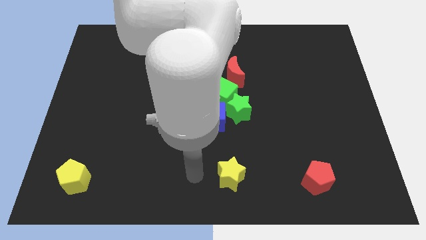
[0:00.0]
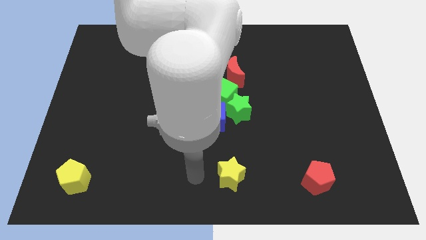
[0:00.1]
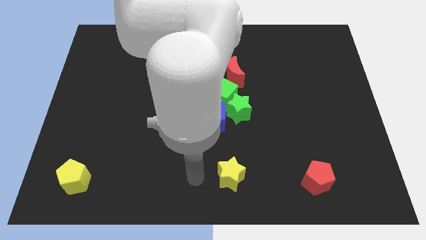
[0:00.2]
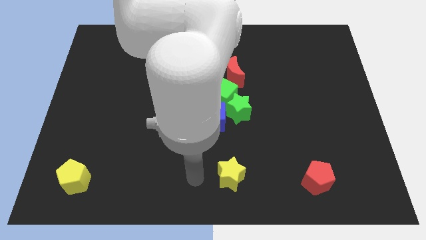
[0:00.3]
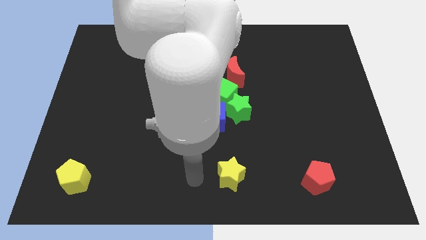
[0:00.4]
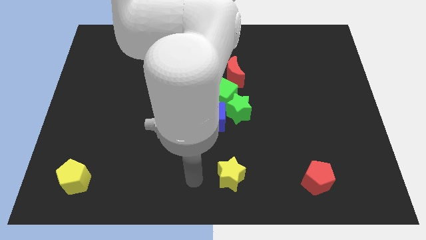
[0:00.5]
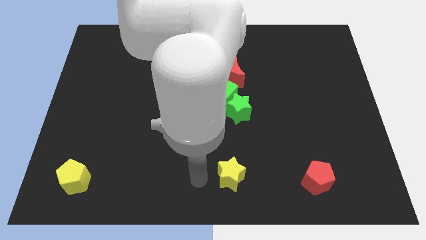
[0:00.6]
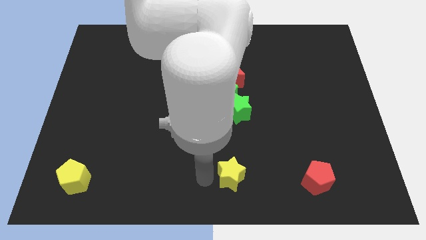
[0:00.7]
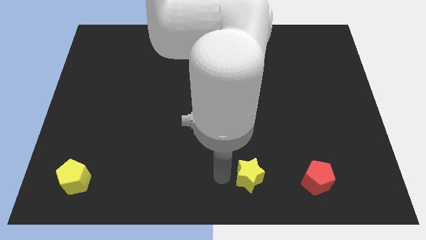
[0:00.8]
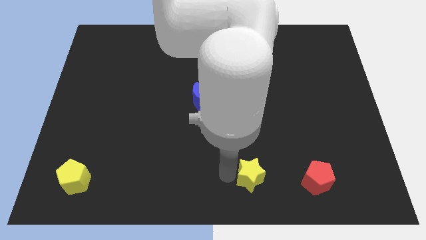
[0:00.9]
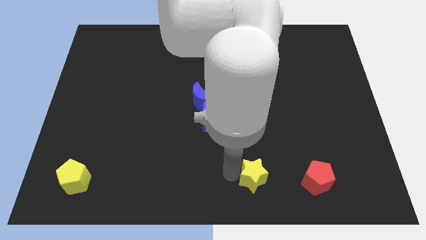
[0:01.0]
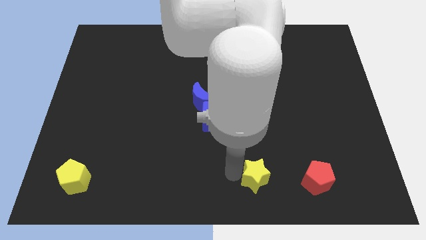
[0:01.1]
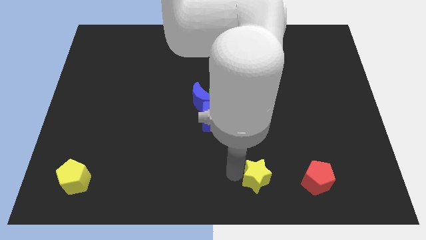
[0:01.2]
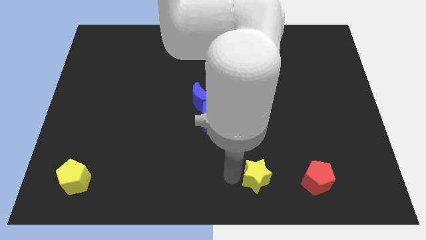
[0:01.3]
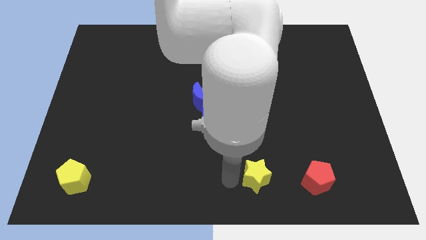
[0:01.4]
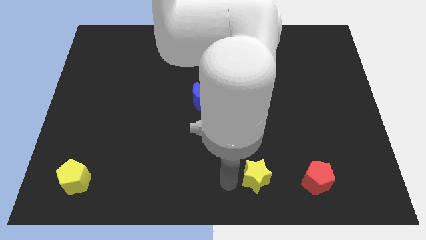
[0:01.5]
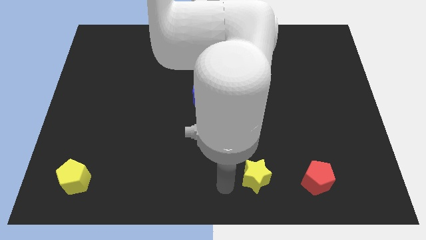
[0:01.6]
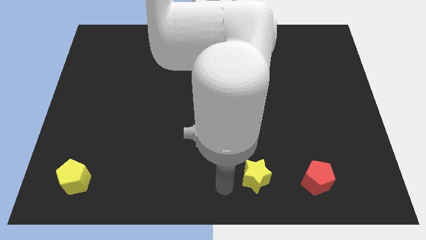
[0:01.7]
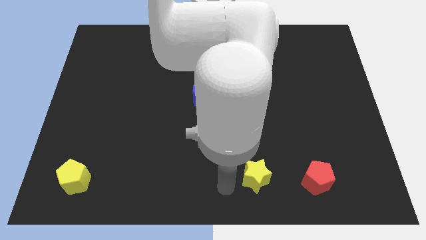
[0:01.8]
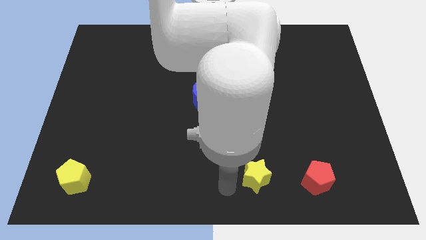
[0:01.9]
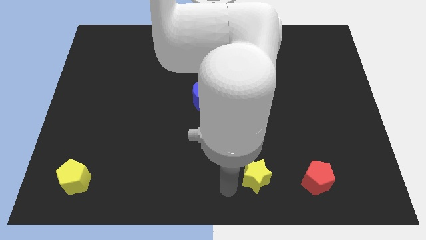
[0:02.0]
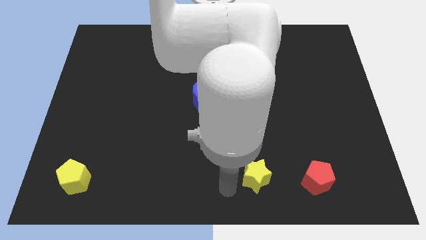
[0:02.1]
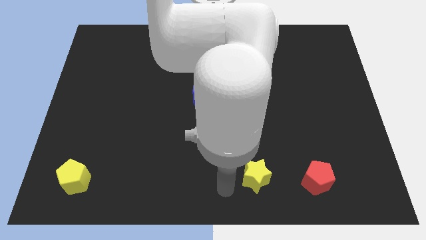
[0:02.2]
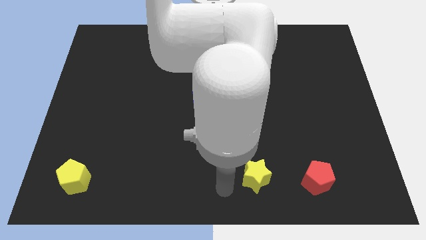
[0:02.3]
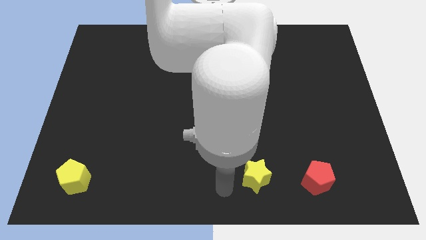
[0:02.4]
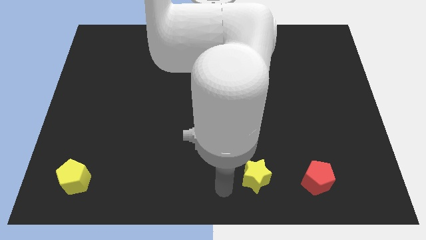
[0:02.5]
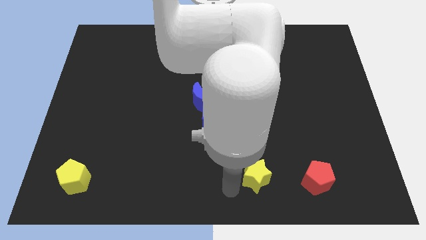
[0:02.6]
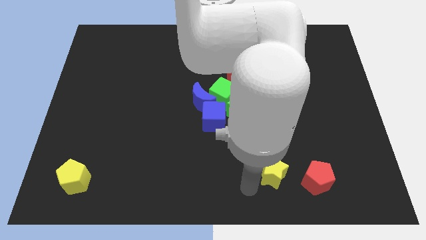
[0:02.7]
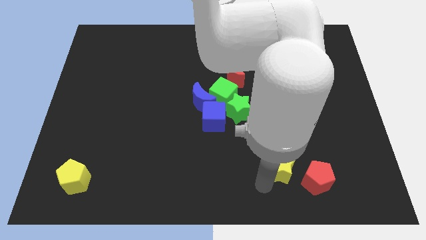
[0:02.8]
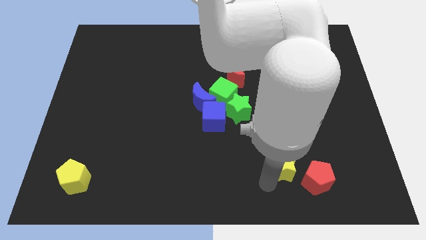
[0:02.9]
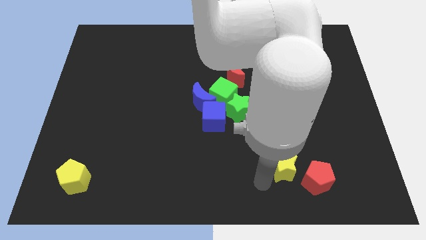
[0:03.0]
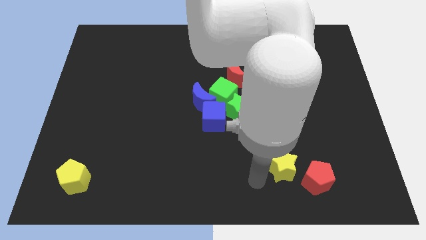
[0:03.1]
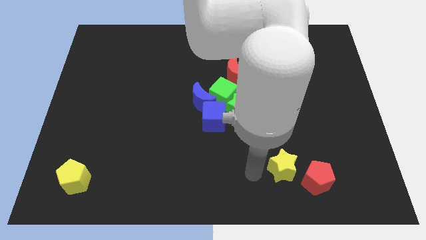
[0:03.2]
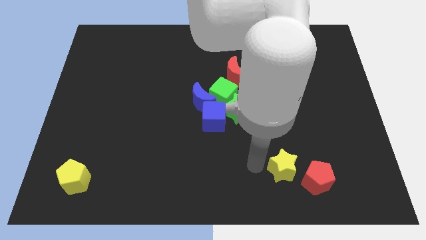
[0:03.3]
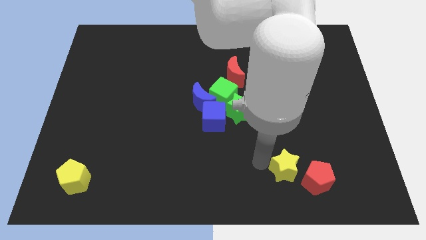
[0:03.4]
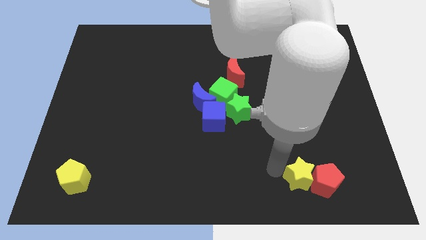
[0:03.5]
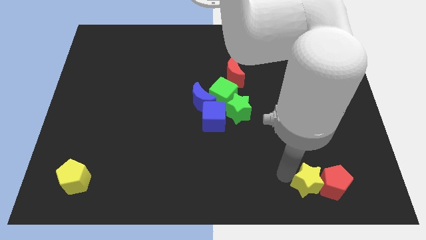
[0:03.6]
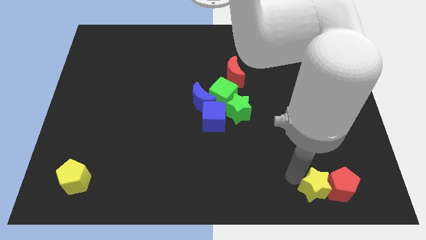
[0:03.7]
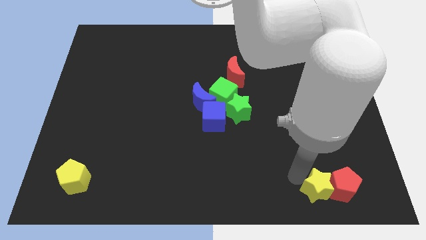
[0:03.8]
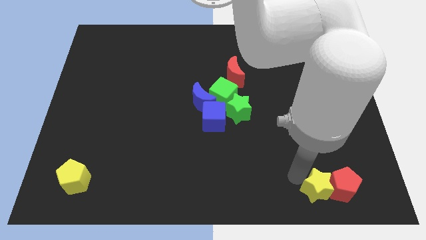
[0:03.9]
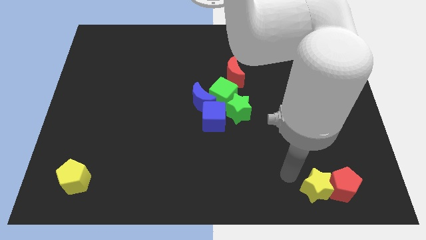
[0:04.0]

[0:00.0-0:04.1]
move the yellow star into the red pentagon

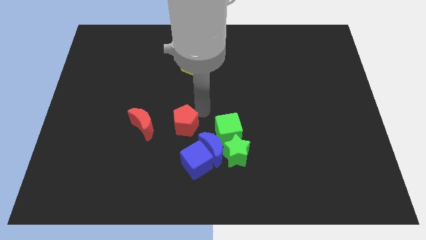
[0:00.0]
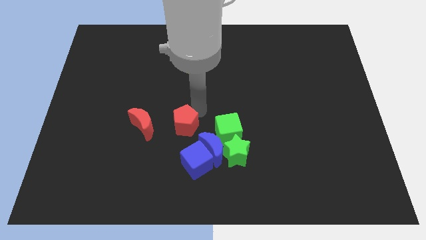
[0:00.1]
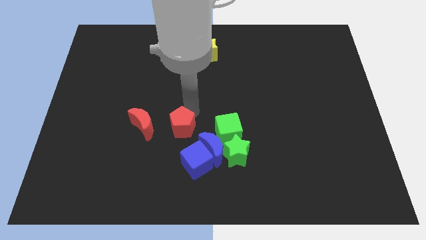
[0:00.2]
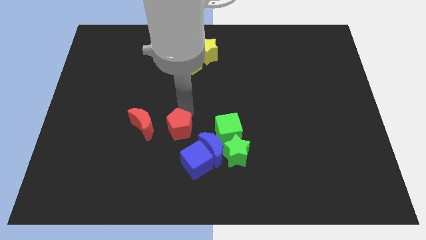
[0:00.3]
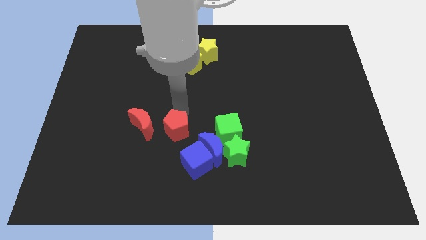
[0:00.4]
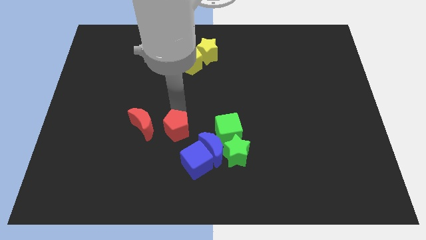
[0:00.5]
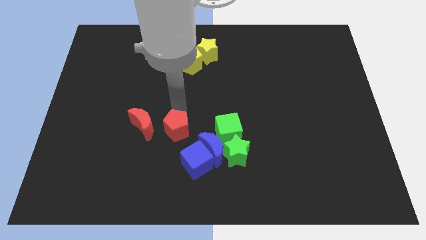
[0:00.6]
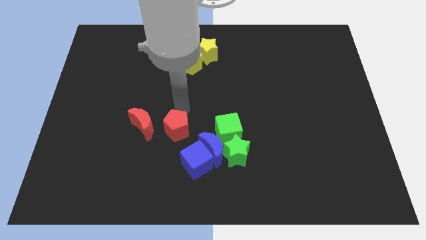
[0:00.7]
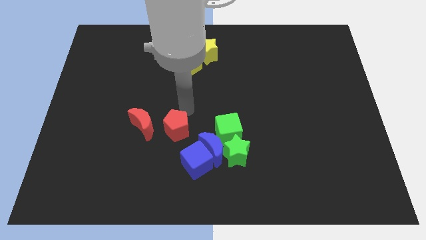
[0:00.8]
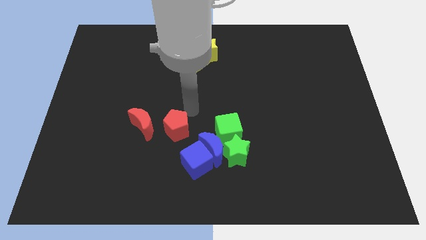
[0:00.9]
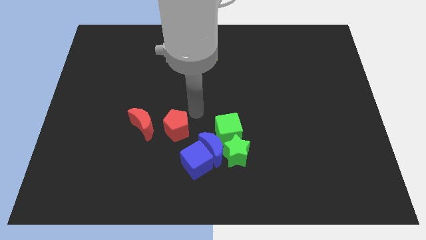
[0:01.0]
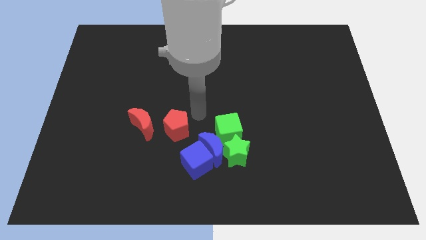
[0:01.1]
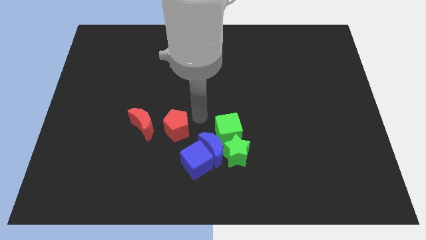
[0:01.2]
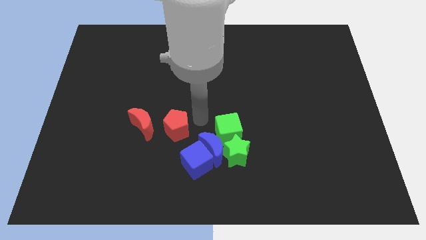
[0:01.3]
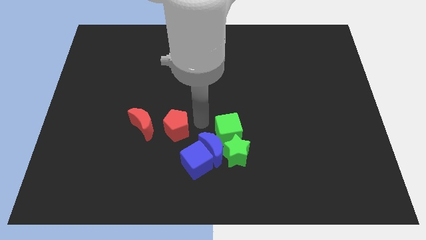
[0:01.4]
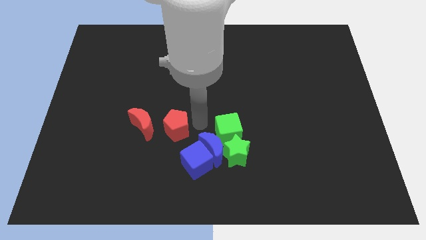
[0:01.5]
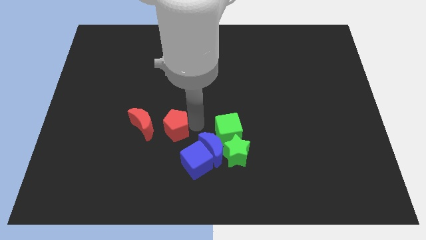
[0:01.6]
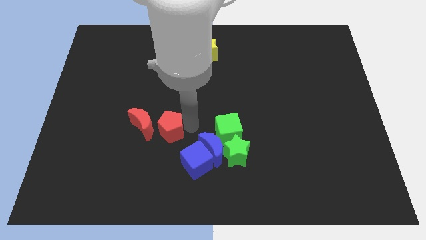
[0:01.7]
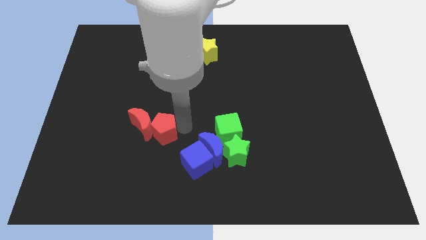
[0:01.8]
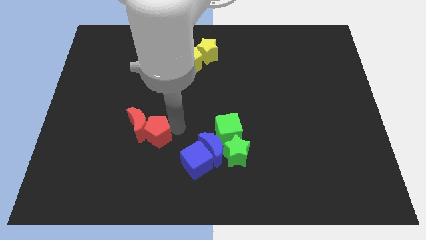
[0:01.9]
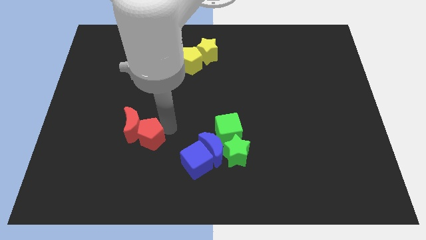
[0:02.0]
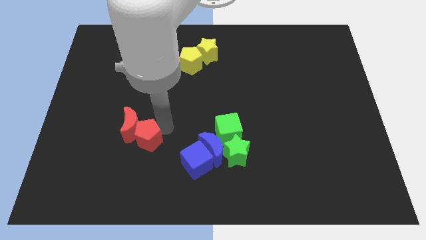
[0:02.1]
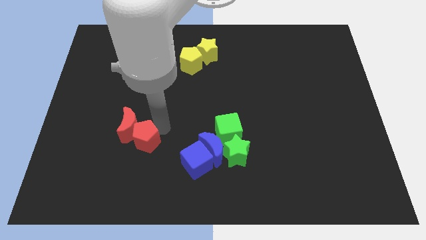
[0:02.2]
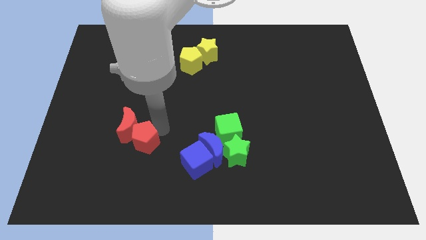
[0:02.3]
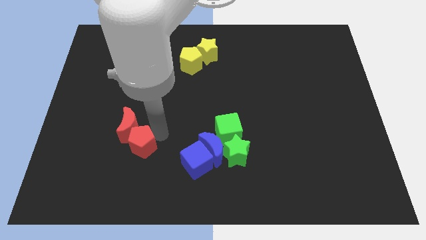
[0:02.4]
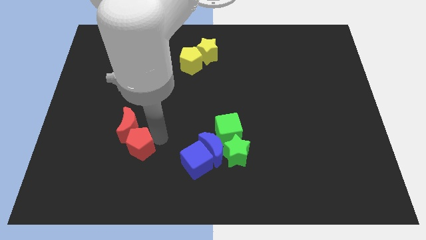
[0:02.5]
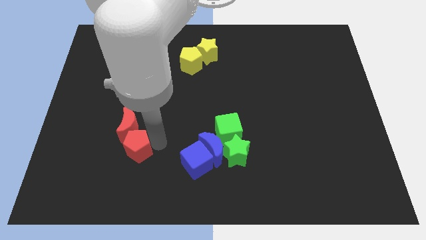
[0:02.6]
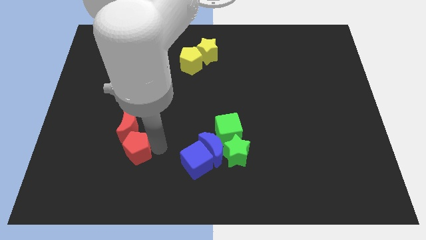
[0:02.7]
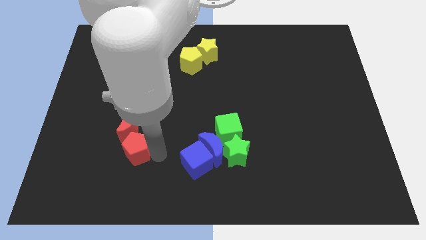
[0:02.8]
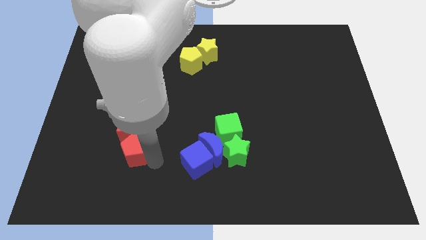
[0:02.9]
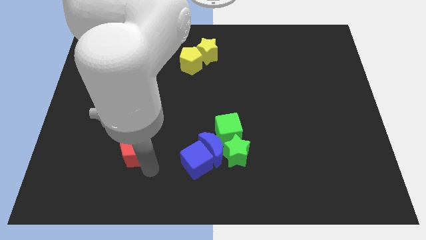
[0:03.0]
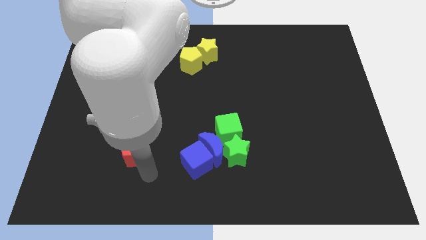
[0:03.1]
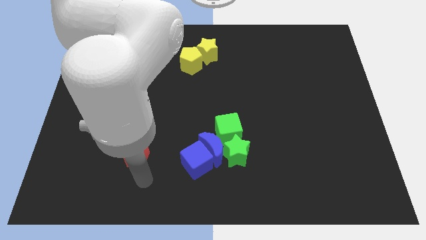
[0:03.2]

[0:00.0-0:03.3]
push the red pentagon to the bottom of red crescent

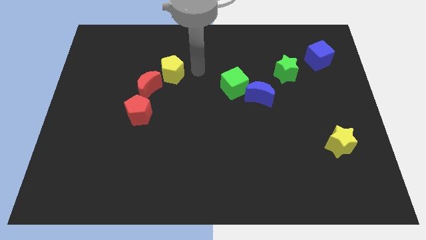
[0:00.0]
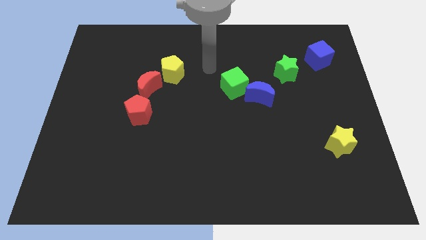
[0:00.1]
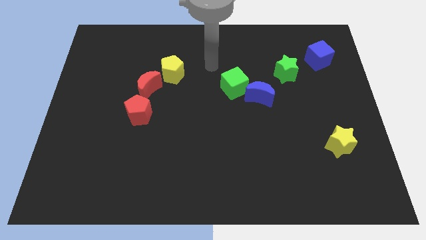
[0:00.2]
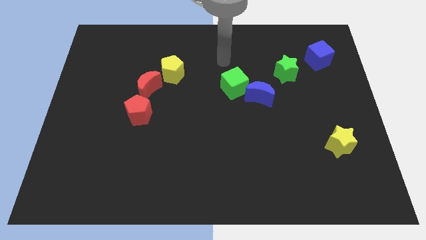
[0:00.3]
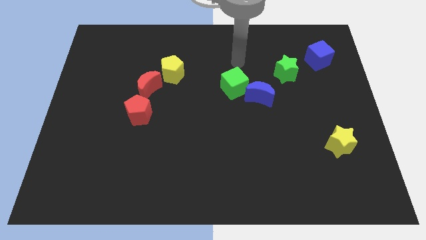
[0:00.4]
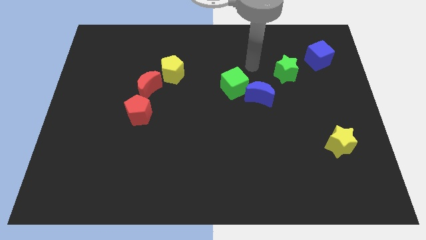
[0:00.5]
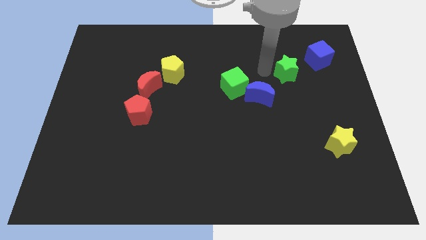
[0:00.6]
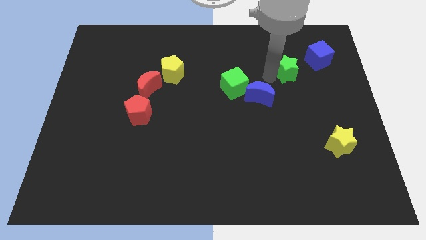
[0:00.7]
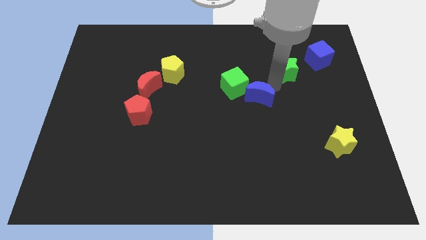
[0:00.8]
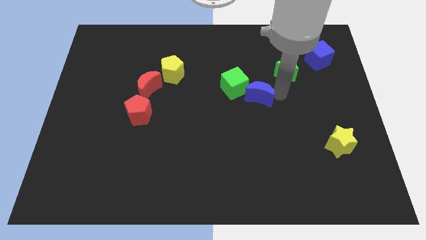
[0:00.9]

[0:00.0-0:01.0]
place your arm in between green star and blue moon

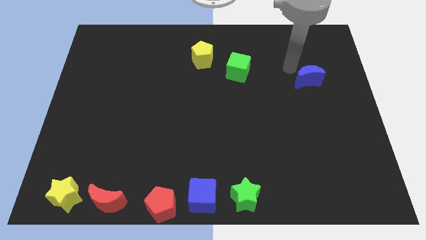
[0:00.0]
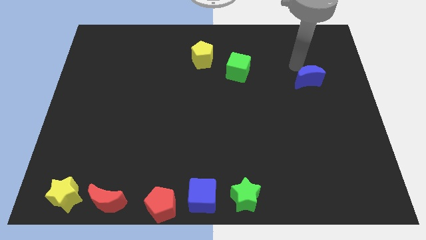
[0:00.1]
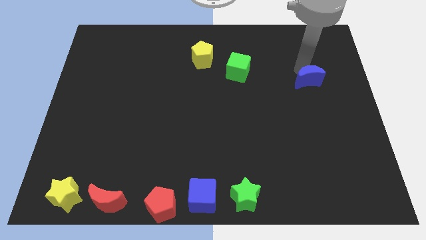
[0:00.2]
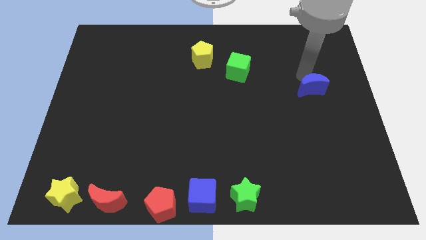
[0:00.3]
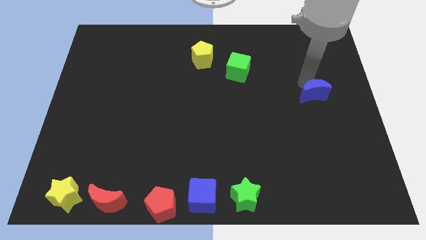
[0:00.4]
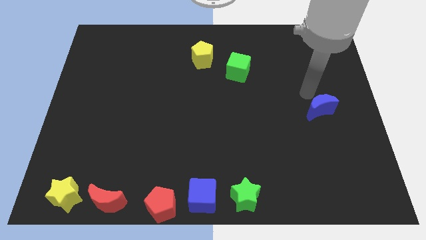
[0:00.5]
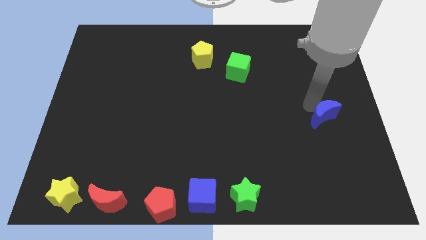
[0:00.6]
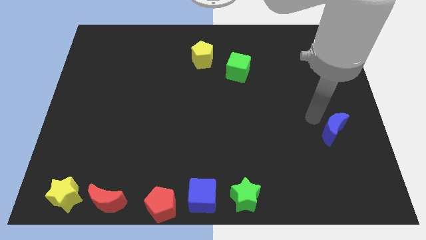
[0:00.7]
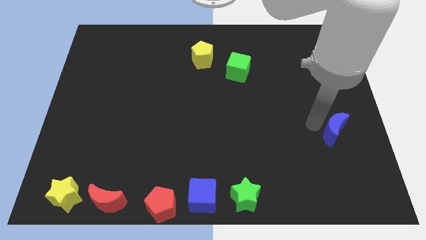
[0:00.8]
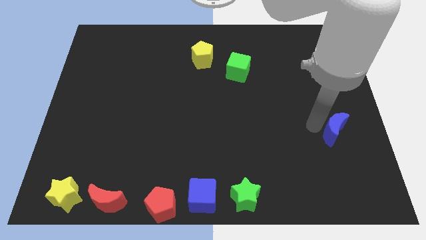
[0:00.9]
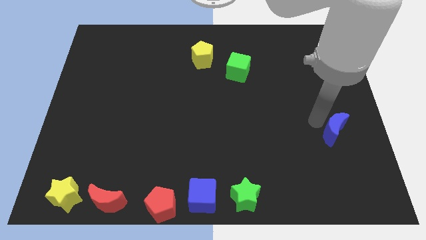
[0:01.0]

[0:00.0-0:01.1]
place the blue moon diagonally to the green star
